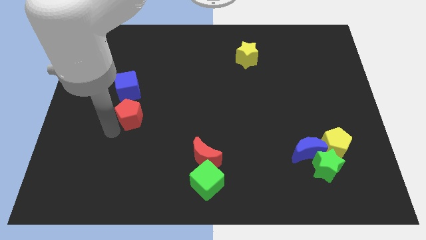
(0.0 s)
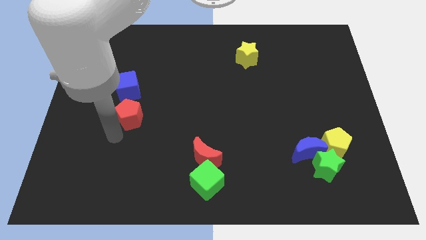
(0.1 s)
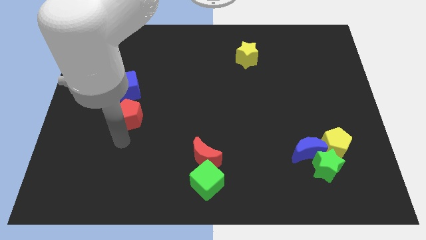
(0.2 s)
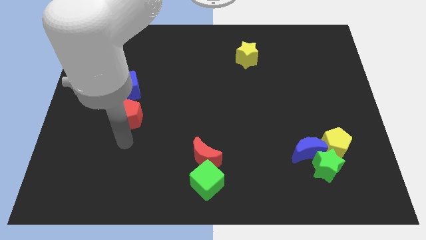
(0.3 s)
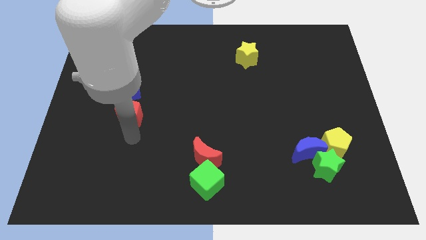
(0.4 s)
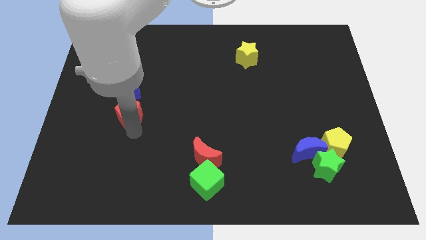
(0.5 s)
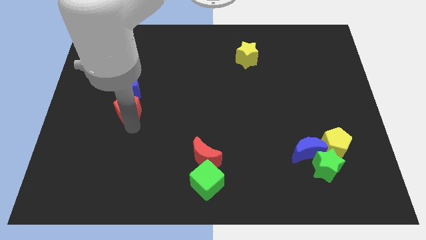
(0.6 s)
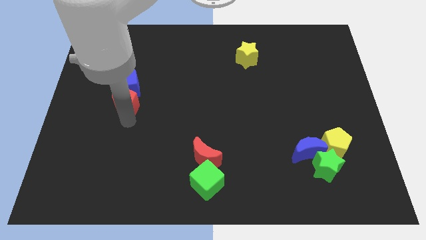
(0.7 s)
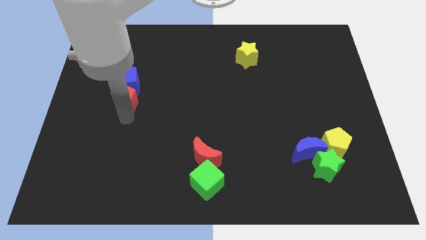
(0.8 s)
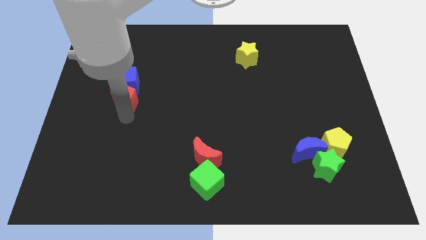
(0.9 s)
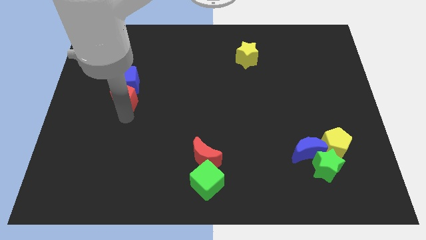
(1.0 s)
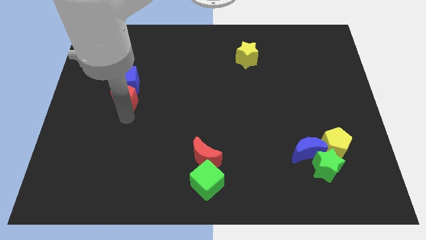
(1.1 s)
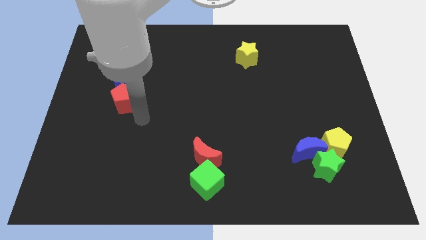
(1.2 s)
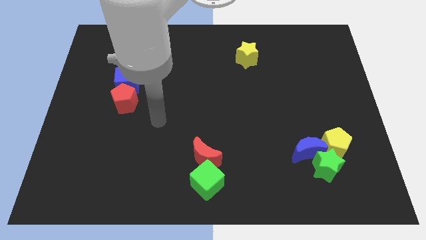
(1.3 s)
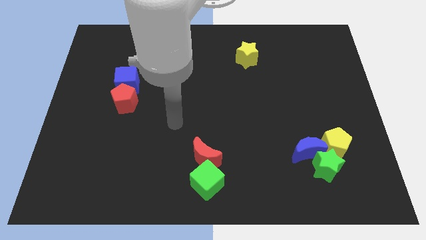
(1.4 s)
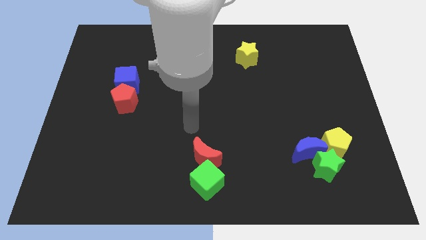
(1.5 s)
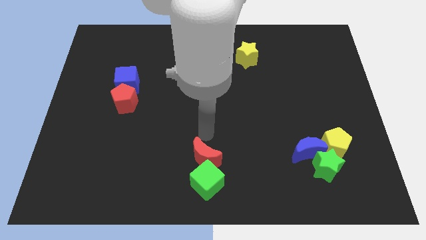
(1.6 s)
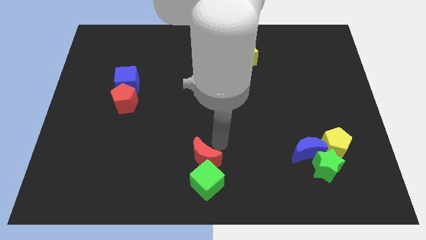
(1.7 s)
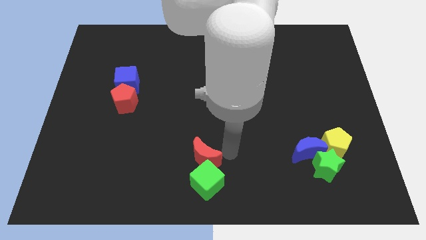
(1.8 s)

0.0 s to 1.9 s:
put the red pentagon into the blue cube

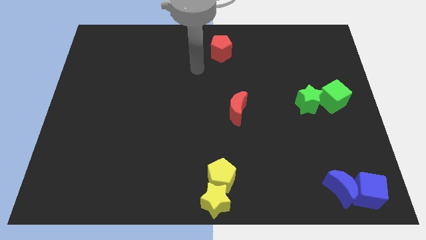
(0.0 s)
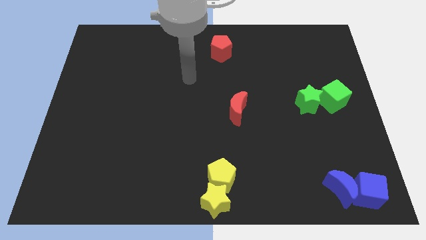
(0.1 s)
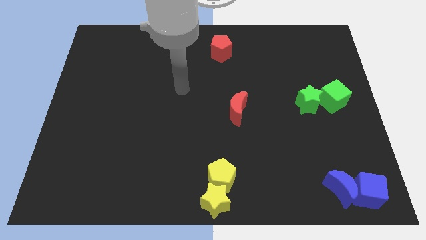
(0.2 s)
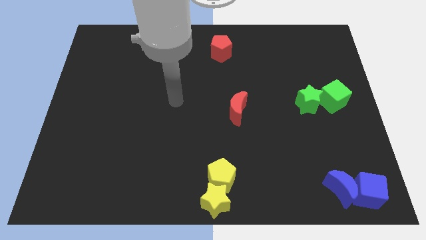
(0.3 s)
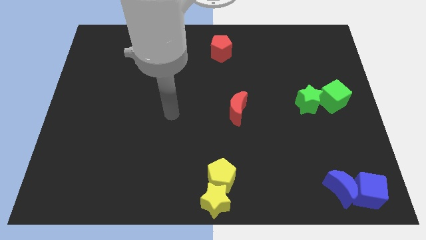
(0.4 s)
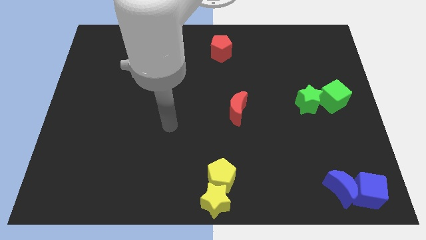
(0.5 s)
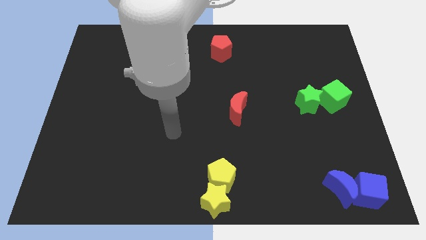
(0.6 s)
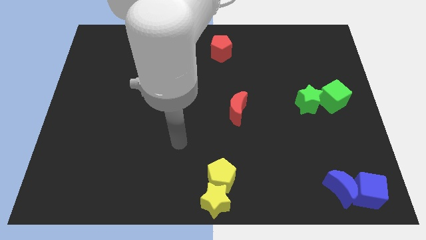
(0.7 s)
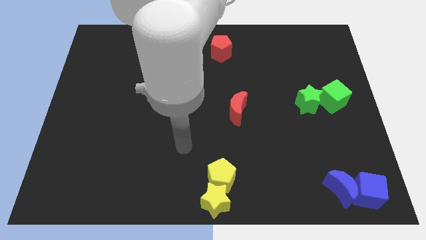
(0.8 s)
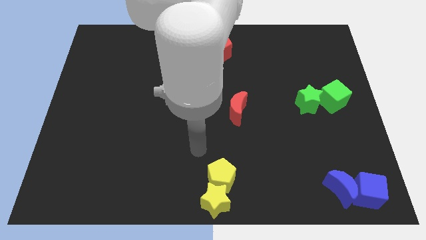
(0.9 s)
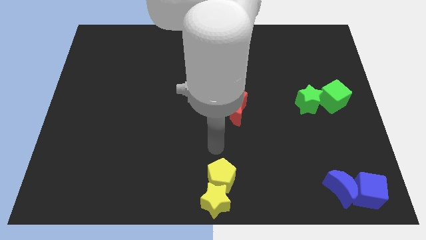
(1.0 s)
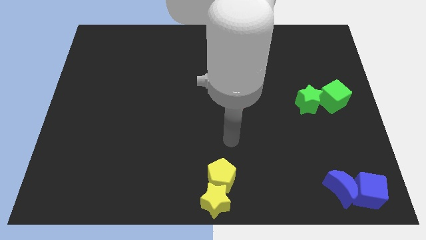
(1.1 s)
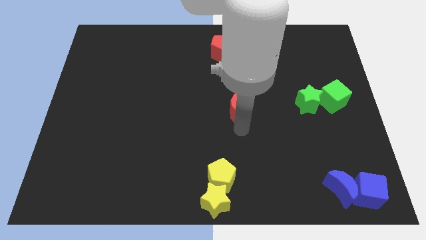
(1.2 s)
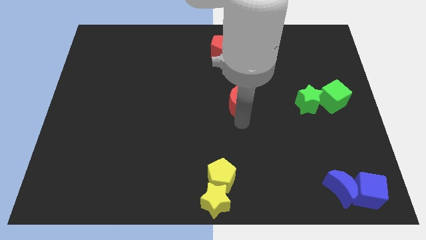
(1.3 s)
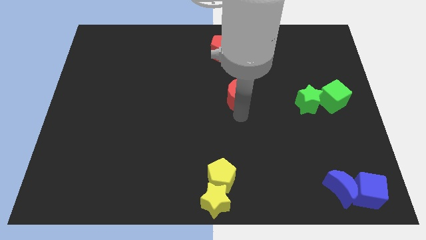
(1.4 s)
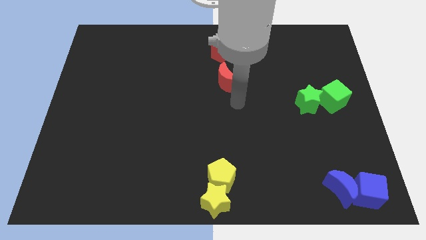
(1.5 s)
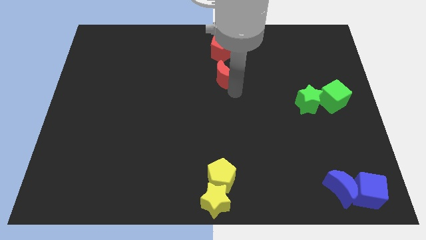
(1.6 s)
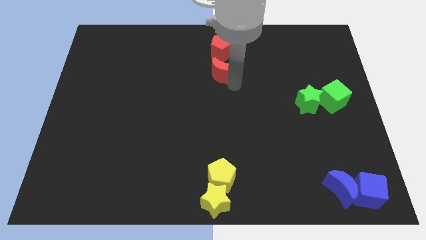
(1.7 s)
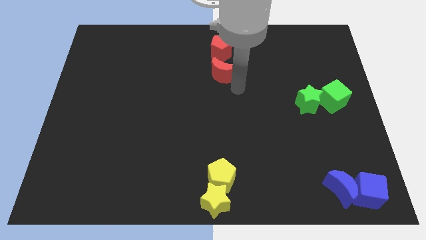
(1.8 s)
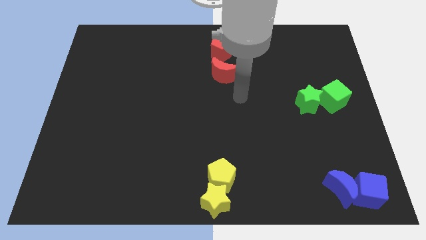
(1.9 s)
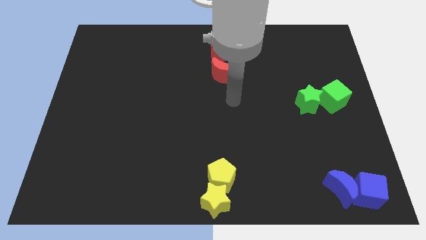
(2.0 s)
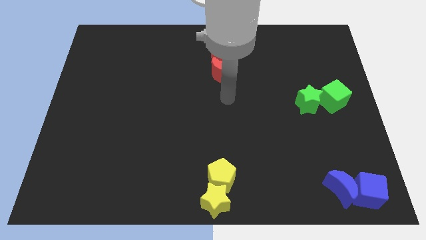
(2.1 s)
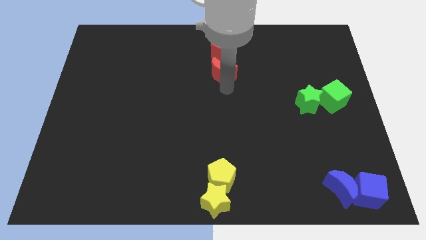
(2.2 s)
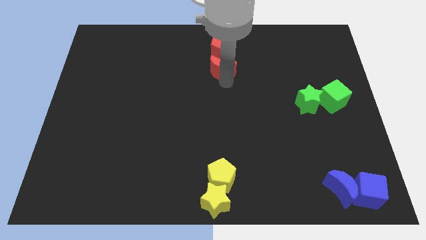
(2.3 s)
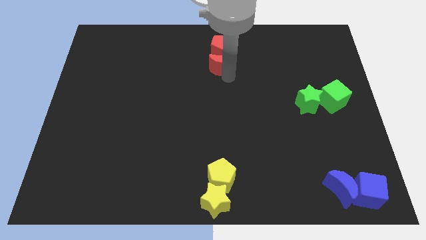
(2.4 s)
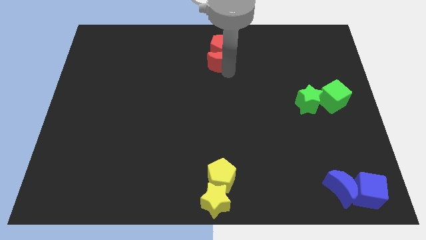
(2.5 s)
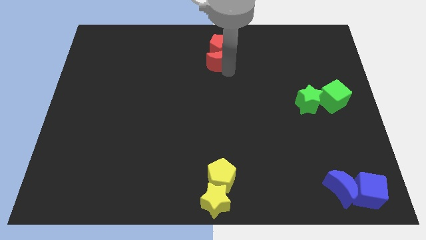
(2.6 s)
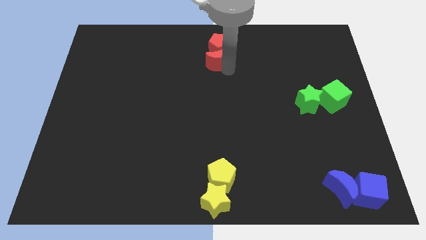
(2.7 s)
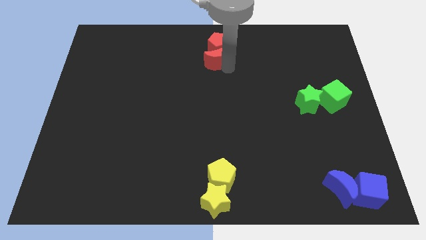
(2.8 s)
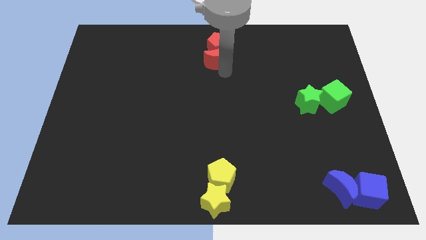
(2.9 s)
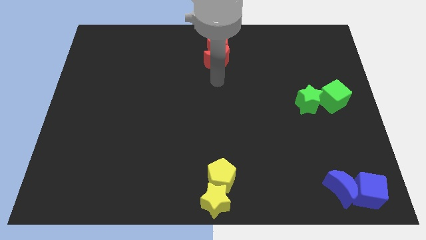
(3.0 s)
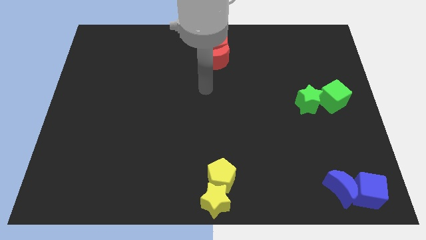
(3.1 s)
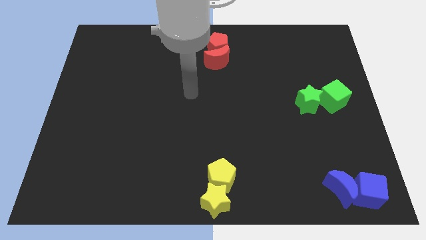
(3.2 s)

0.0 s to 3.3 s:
push the red moon into the red pentagon

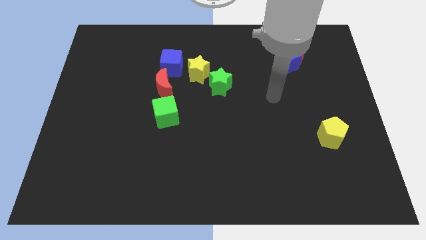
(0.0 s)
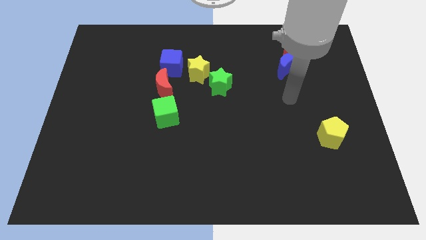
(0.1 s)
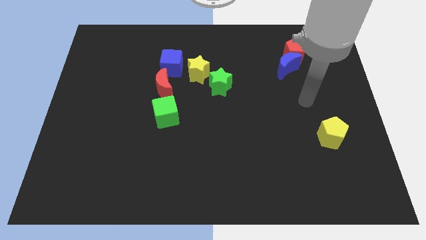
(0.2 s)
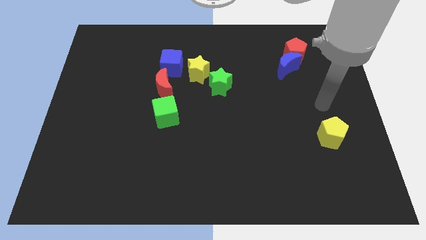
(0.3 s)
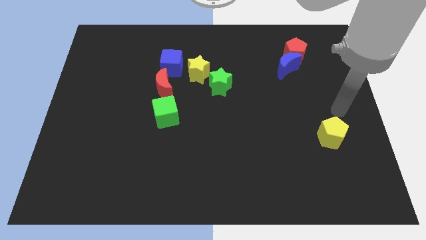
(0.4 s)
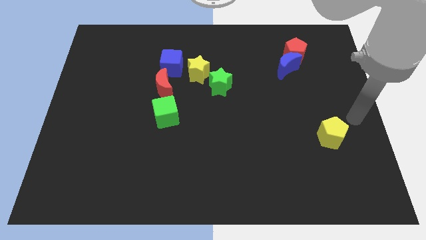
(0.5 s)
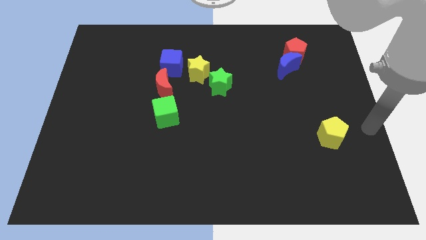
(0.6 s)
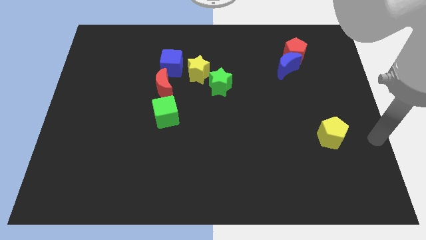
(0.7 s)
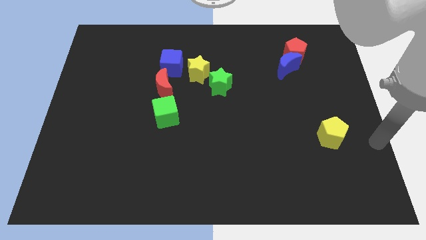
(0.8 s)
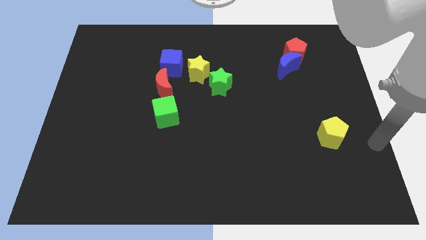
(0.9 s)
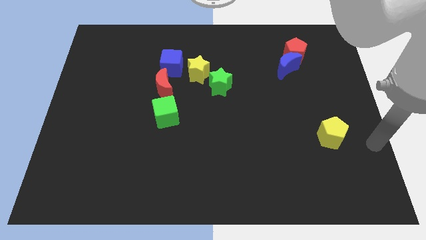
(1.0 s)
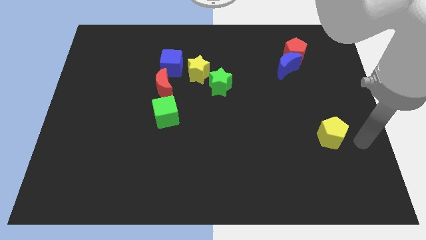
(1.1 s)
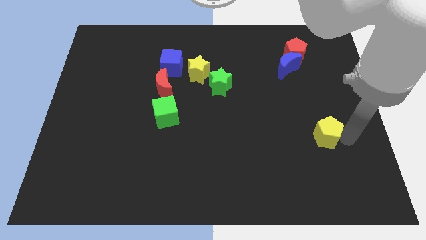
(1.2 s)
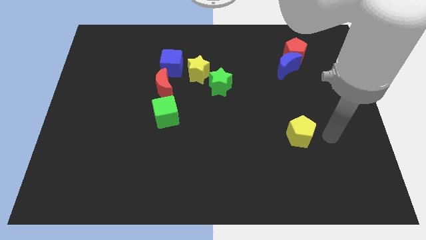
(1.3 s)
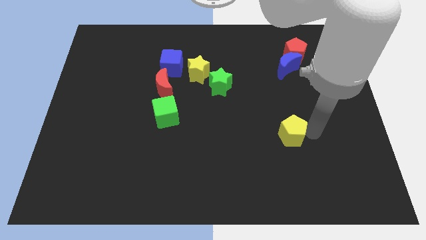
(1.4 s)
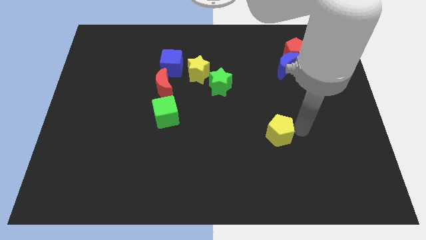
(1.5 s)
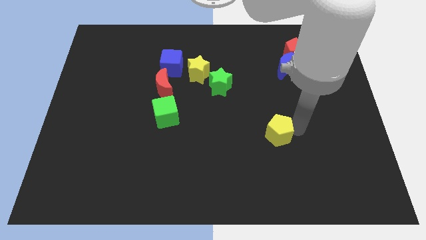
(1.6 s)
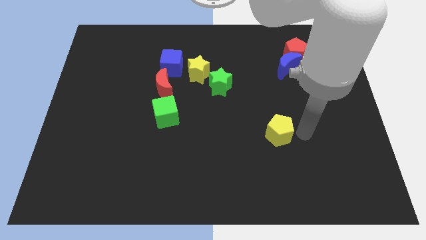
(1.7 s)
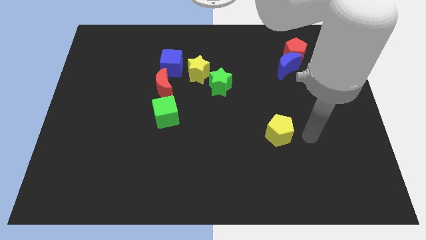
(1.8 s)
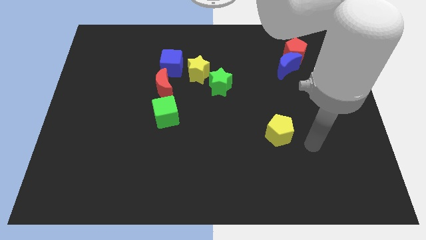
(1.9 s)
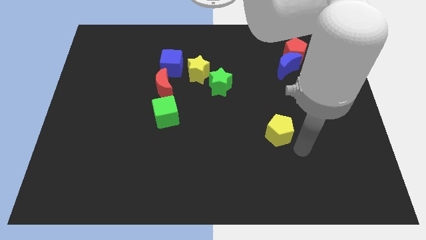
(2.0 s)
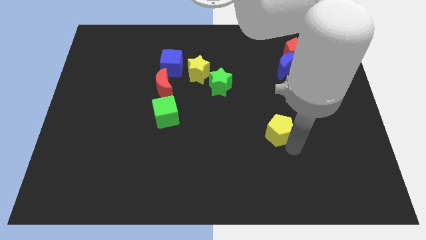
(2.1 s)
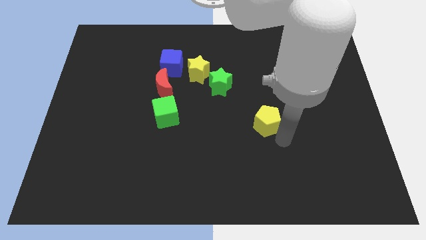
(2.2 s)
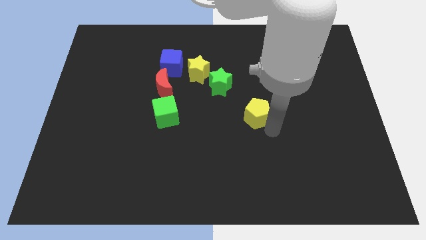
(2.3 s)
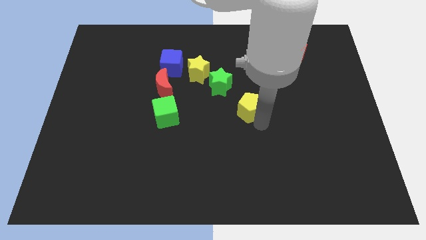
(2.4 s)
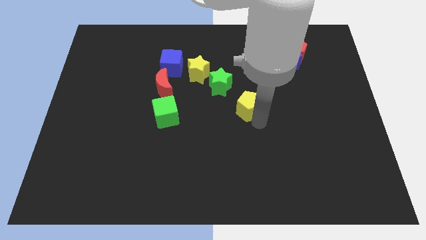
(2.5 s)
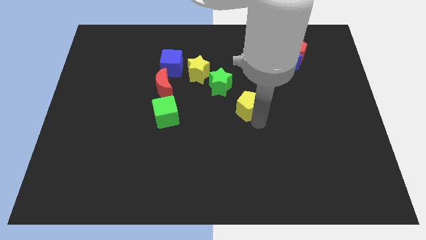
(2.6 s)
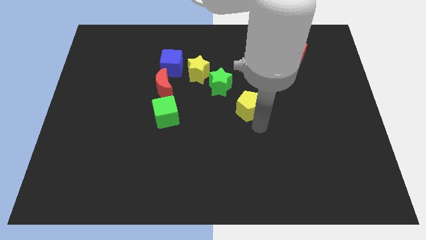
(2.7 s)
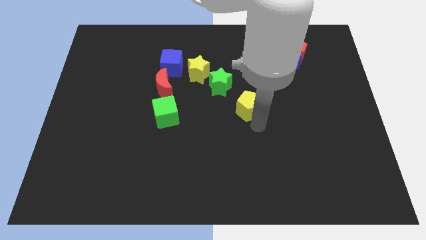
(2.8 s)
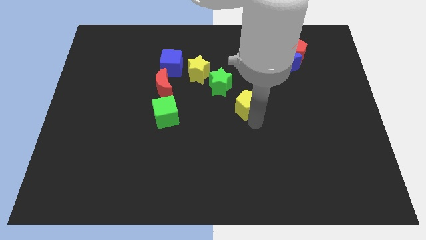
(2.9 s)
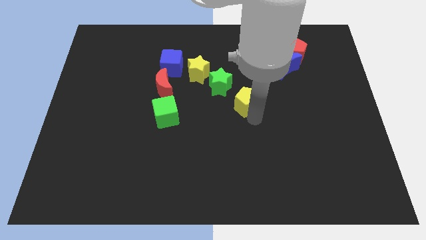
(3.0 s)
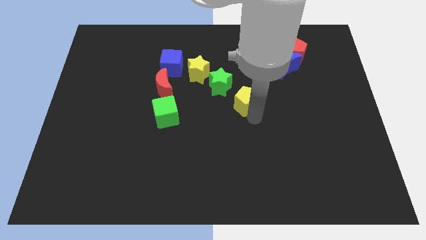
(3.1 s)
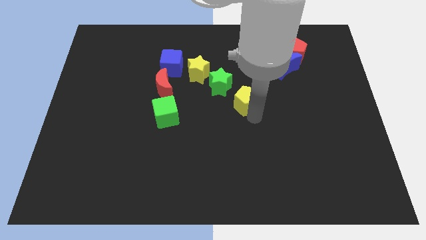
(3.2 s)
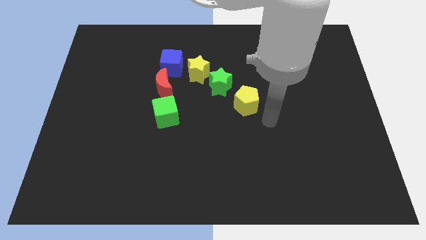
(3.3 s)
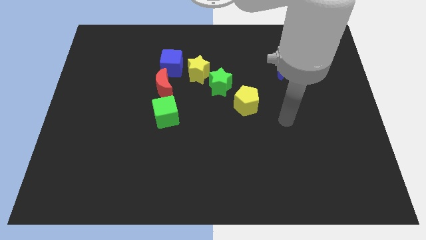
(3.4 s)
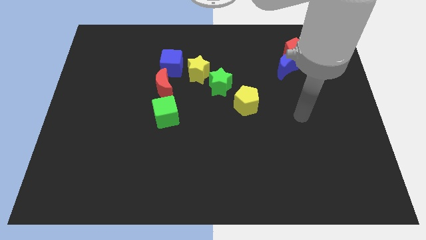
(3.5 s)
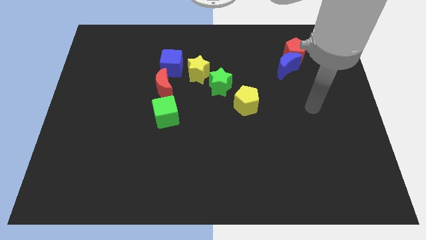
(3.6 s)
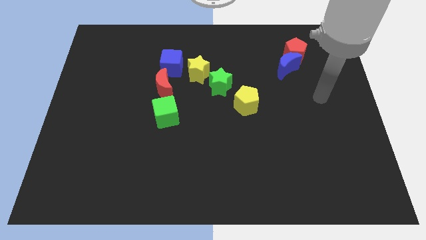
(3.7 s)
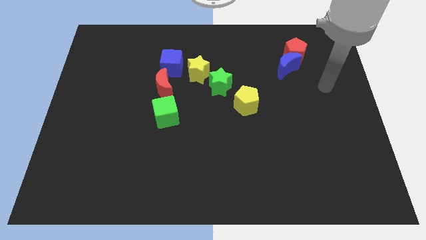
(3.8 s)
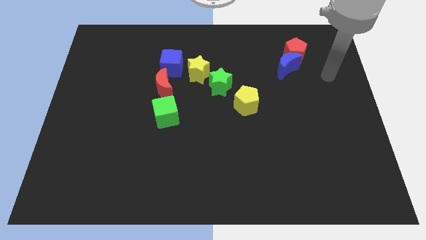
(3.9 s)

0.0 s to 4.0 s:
push the yellow pentagon to the bottom right of the green star
